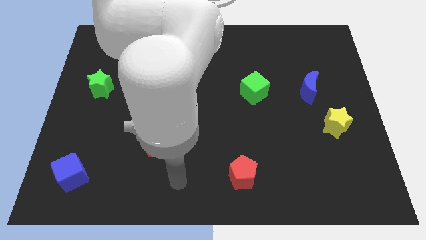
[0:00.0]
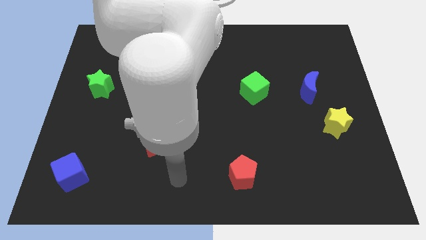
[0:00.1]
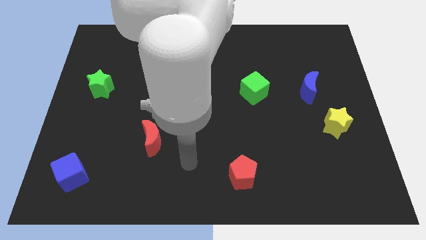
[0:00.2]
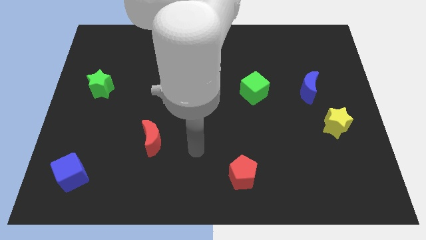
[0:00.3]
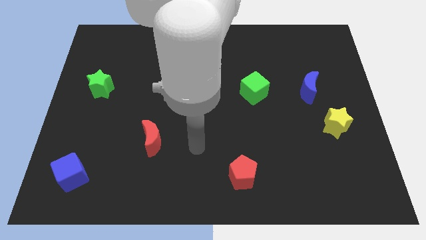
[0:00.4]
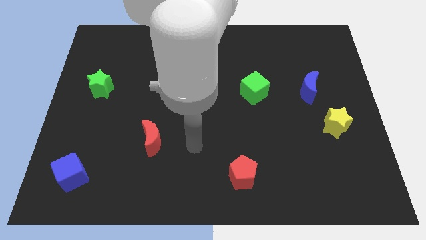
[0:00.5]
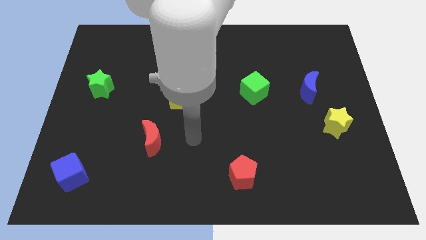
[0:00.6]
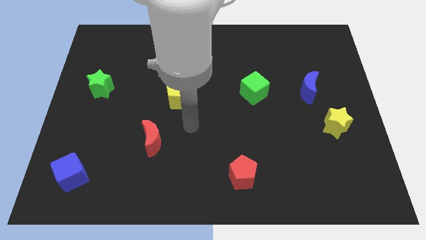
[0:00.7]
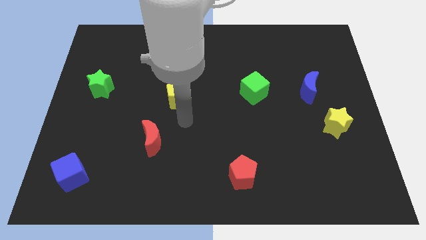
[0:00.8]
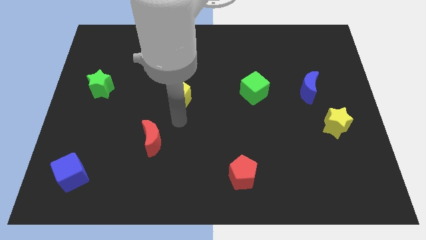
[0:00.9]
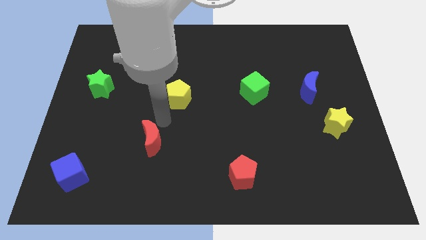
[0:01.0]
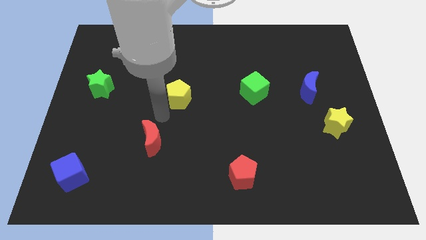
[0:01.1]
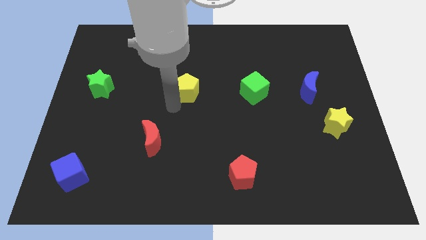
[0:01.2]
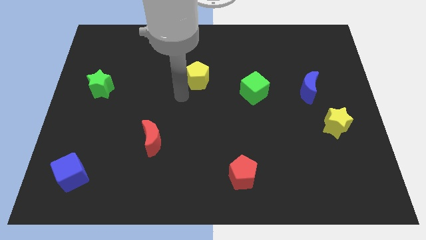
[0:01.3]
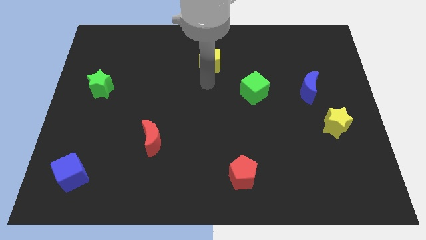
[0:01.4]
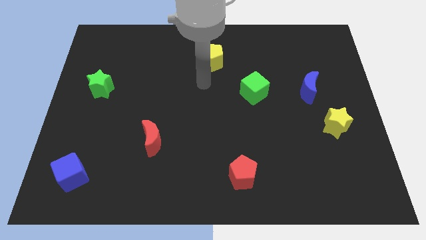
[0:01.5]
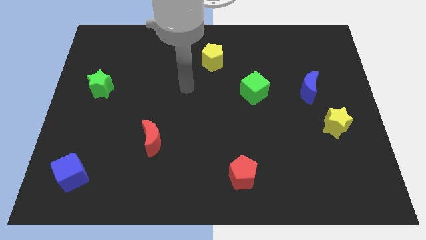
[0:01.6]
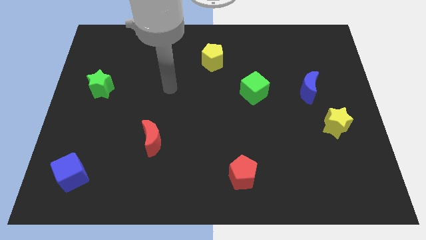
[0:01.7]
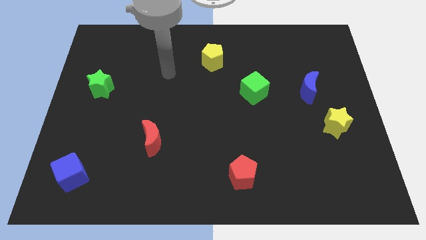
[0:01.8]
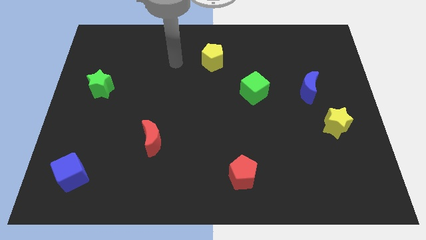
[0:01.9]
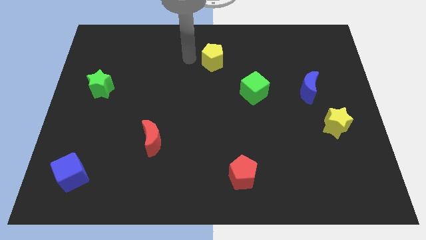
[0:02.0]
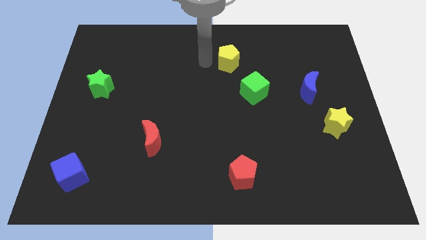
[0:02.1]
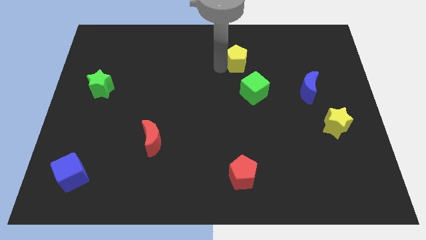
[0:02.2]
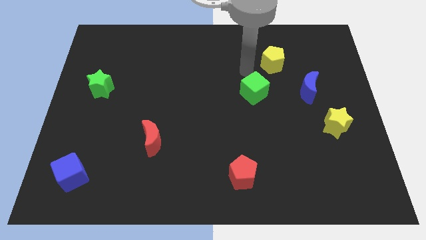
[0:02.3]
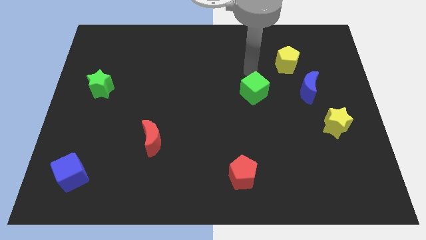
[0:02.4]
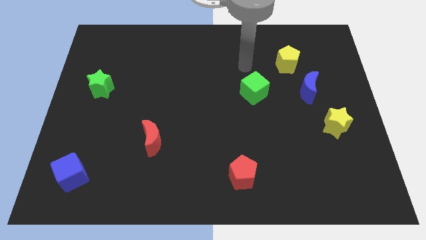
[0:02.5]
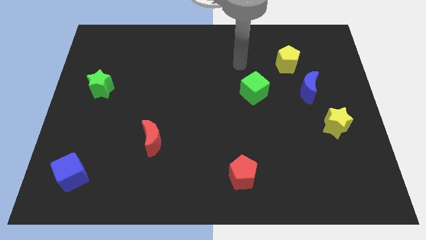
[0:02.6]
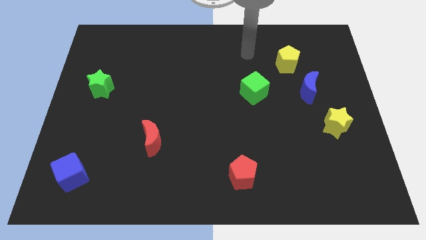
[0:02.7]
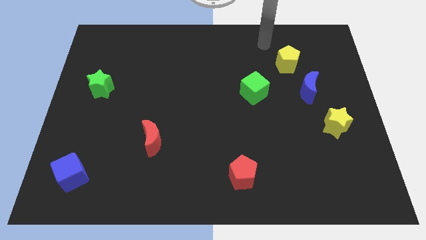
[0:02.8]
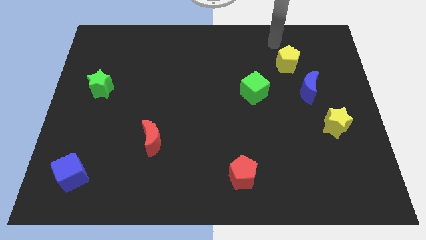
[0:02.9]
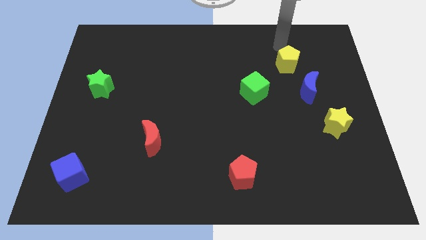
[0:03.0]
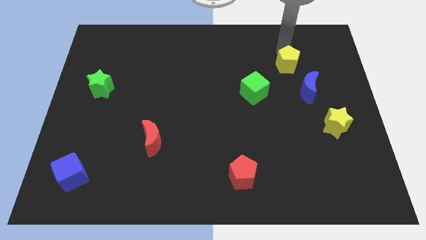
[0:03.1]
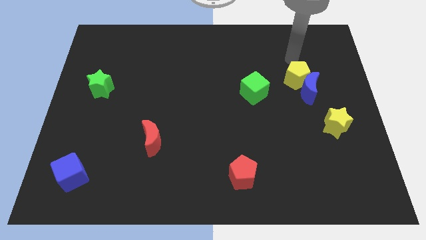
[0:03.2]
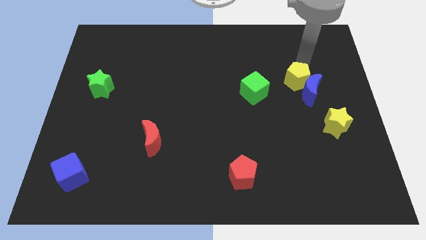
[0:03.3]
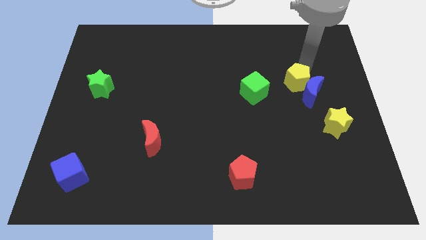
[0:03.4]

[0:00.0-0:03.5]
push the yellow pentagon to the blue moon

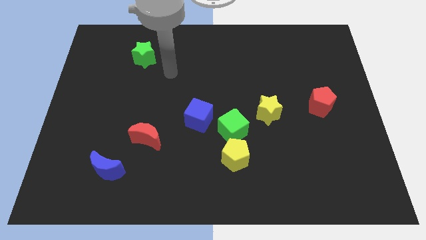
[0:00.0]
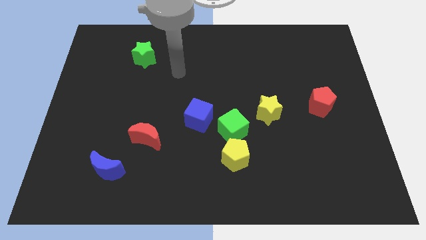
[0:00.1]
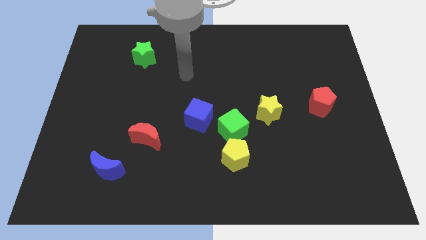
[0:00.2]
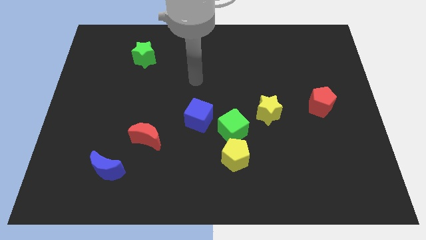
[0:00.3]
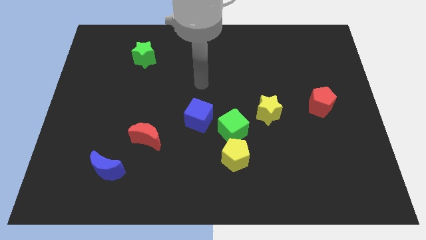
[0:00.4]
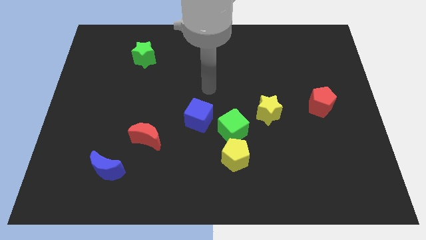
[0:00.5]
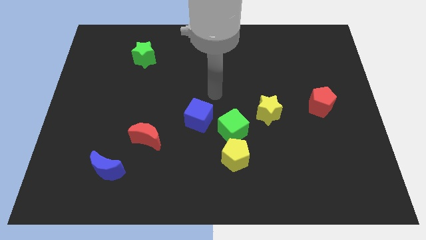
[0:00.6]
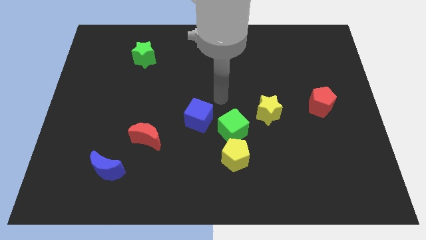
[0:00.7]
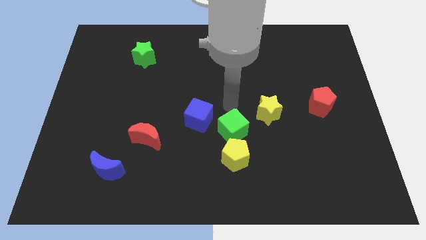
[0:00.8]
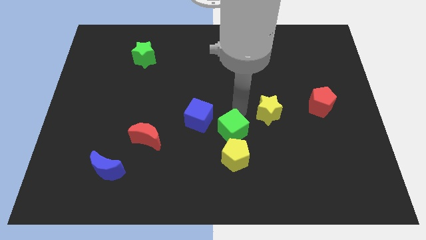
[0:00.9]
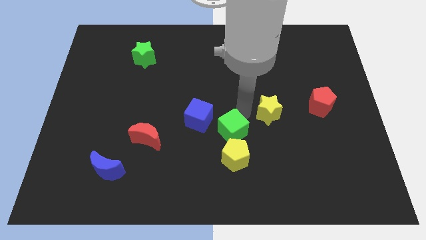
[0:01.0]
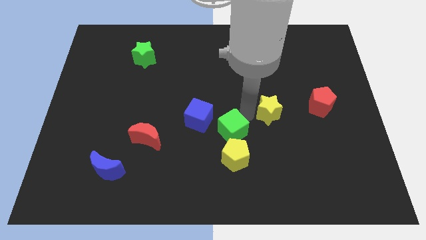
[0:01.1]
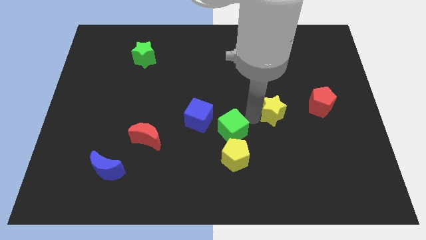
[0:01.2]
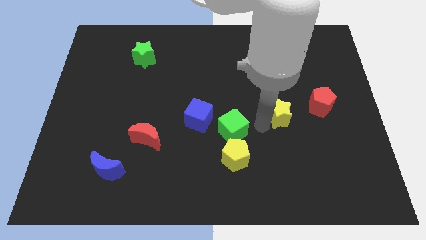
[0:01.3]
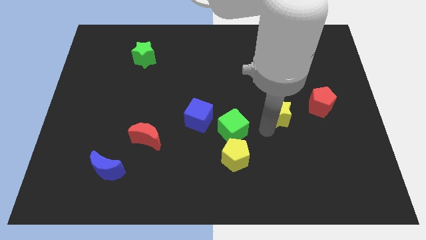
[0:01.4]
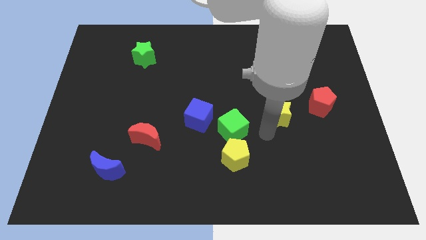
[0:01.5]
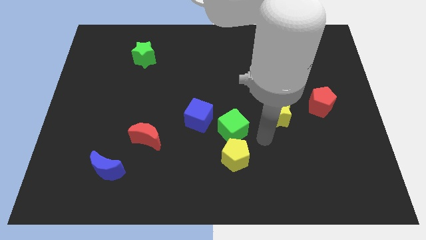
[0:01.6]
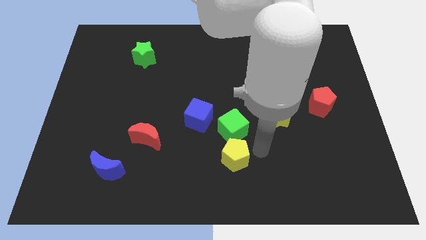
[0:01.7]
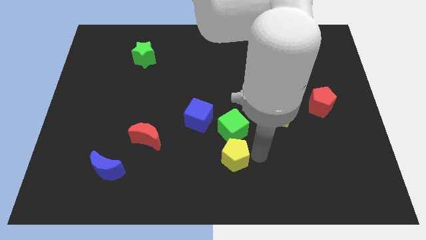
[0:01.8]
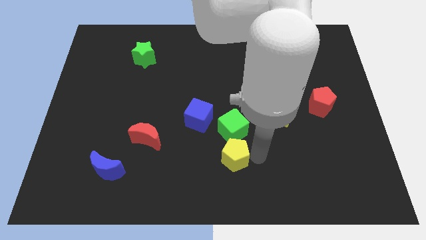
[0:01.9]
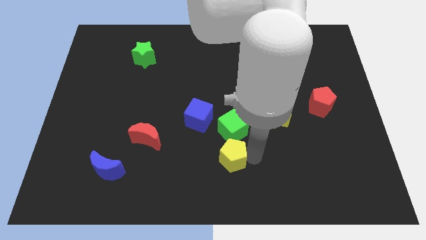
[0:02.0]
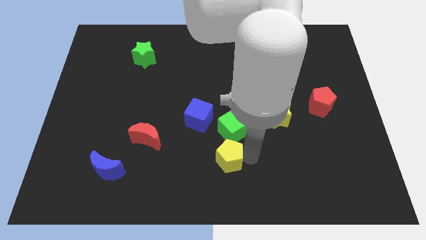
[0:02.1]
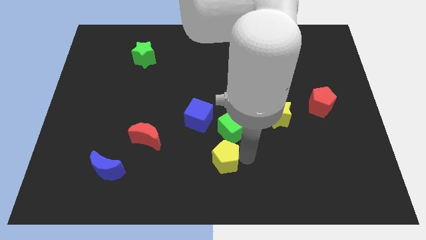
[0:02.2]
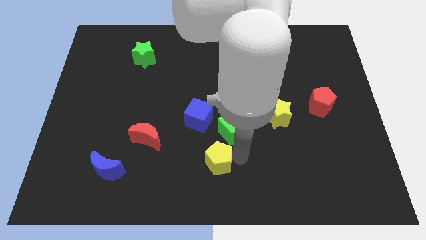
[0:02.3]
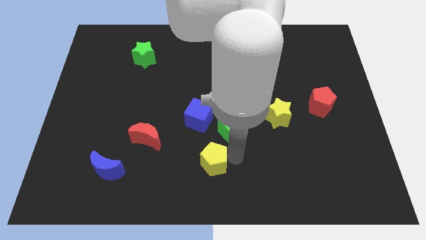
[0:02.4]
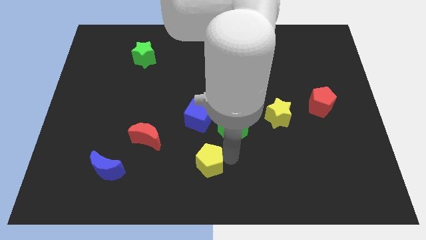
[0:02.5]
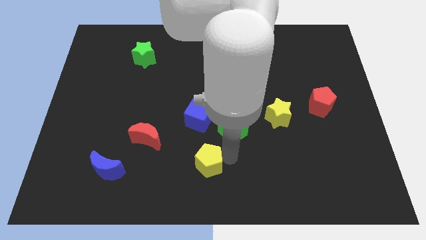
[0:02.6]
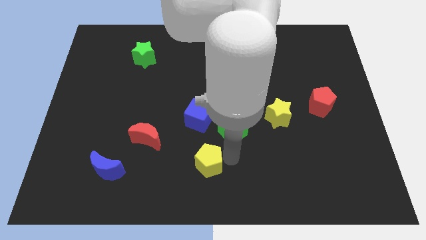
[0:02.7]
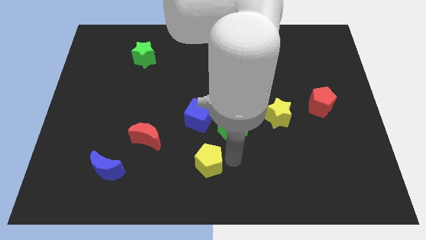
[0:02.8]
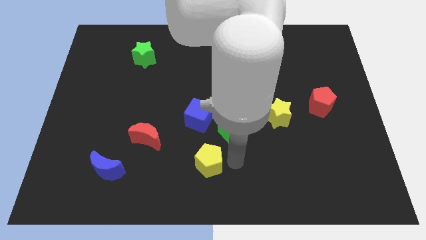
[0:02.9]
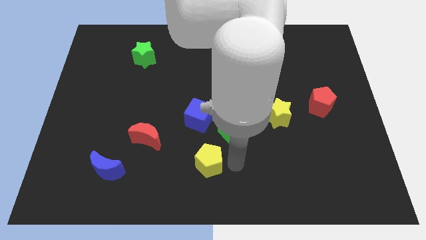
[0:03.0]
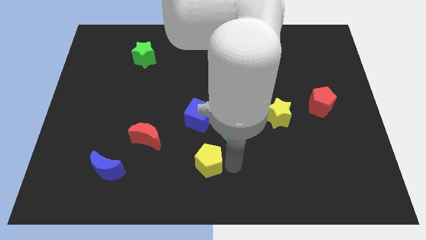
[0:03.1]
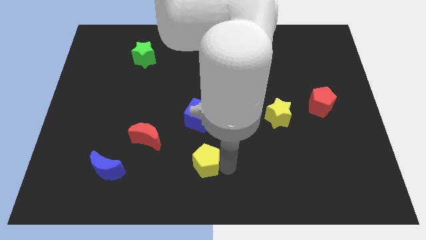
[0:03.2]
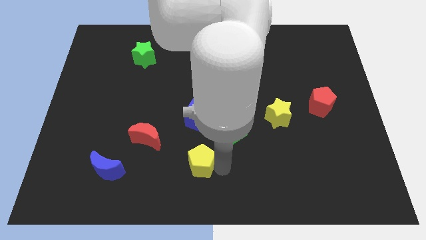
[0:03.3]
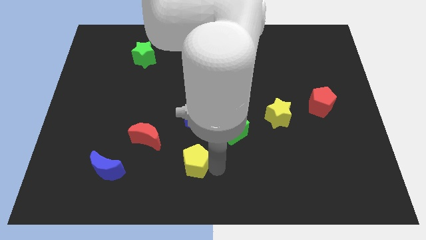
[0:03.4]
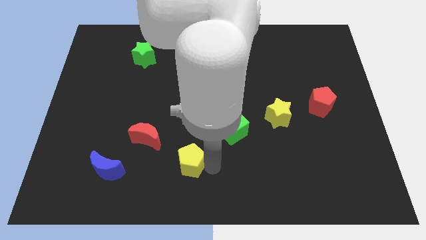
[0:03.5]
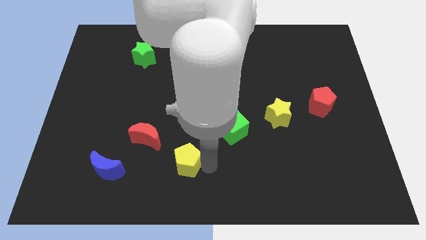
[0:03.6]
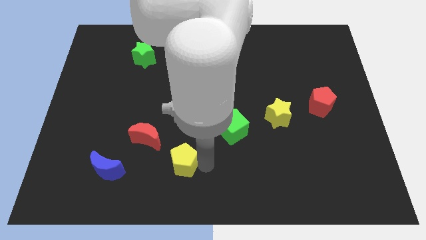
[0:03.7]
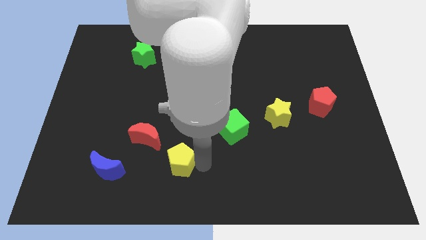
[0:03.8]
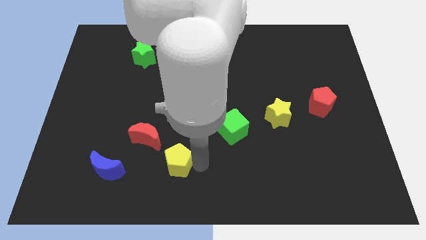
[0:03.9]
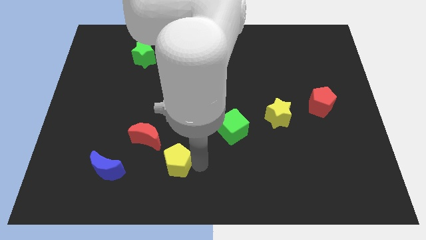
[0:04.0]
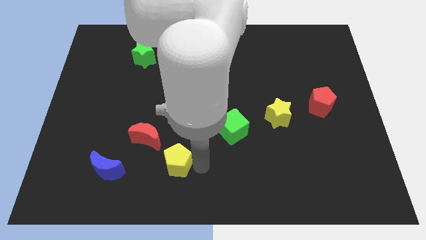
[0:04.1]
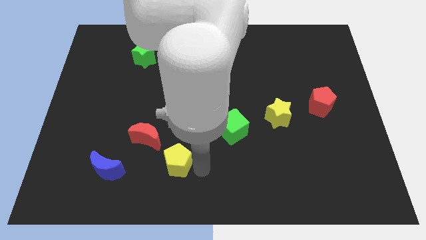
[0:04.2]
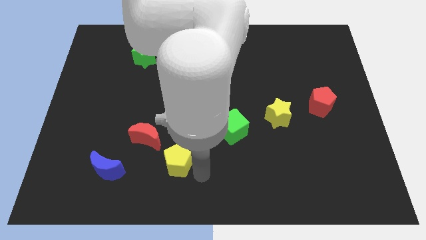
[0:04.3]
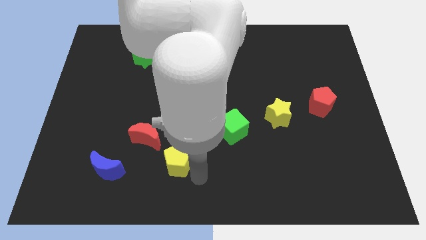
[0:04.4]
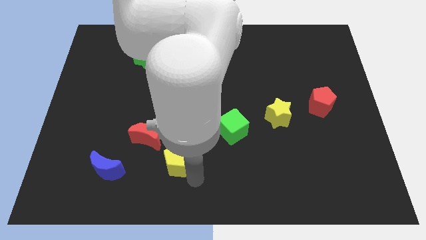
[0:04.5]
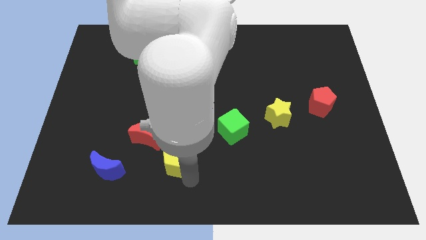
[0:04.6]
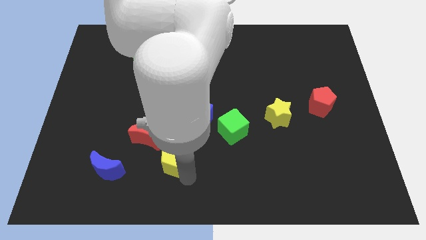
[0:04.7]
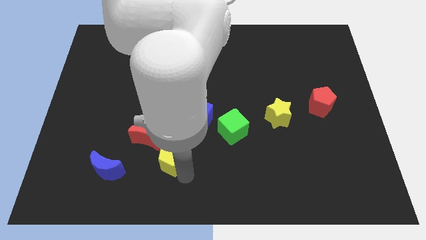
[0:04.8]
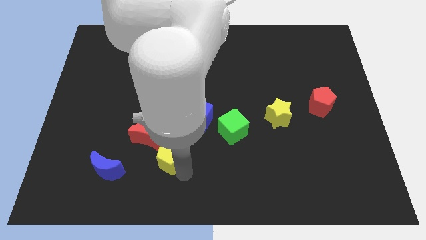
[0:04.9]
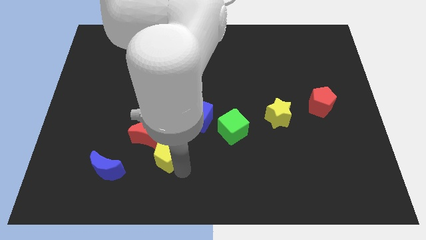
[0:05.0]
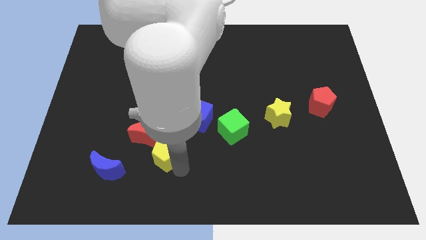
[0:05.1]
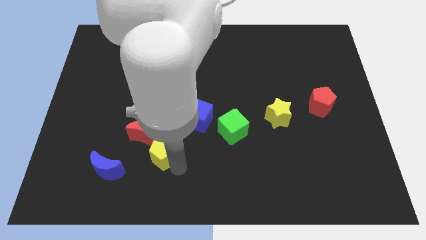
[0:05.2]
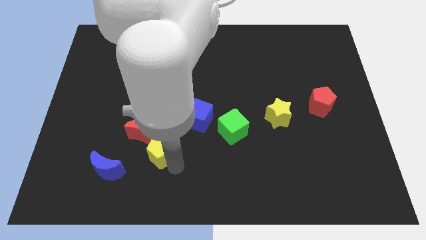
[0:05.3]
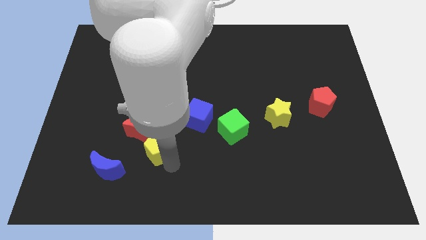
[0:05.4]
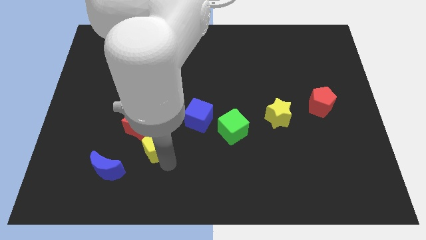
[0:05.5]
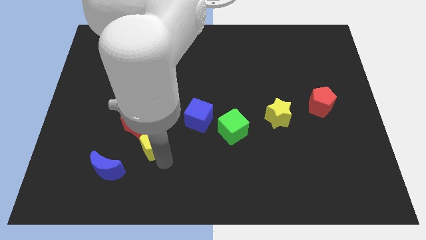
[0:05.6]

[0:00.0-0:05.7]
slide the yellow pentagon close to the red moon
